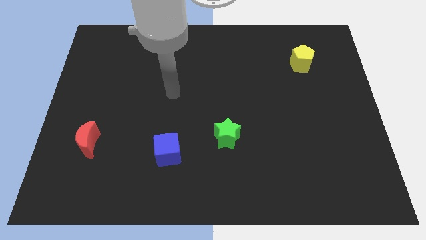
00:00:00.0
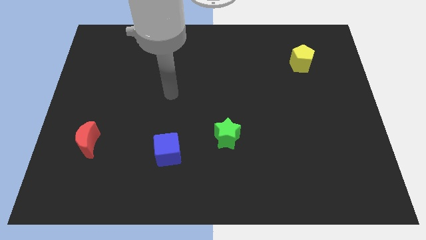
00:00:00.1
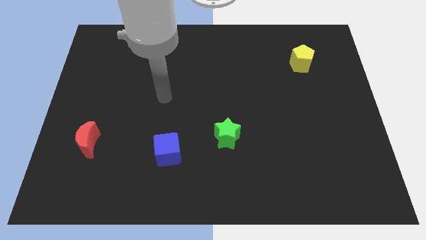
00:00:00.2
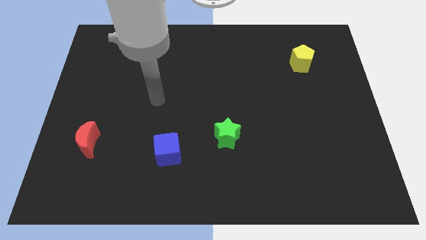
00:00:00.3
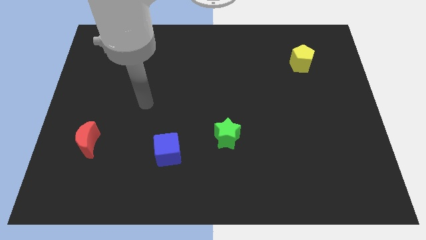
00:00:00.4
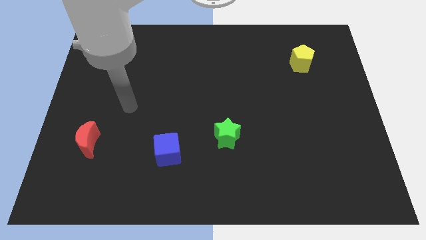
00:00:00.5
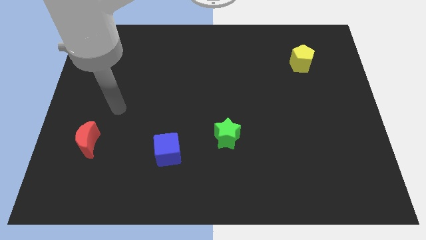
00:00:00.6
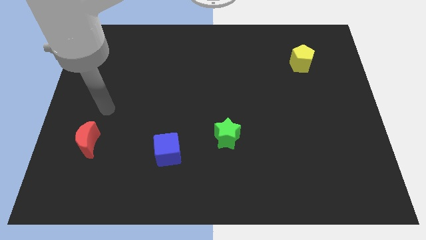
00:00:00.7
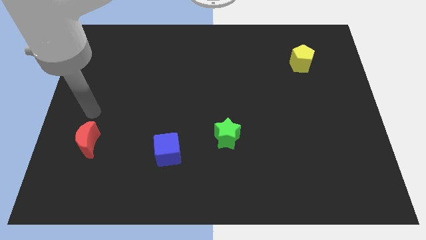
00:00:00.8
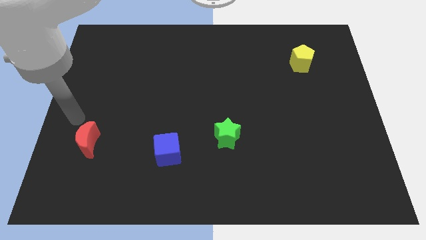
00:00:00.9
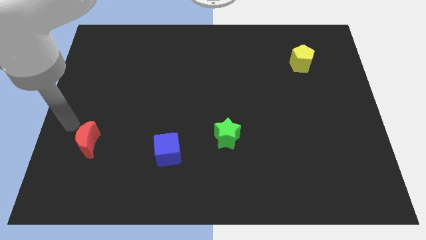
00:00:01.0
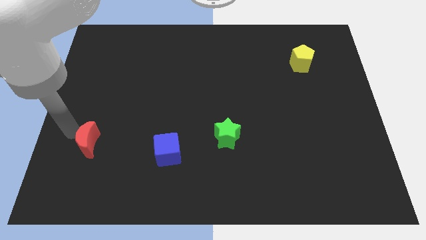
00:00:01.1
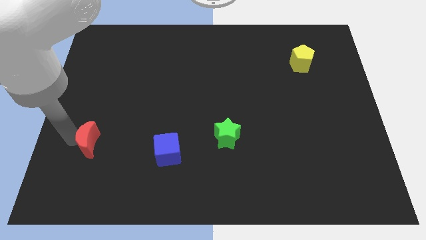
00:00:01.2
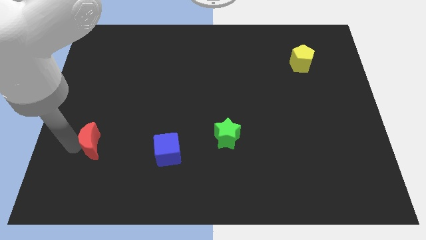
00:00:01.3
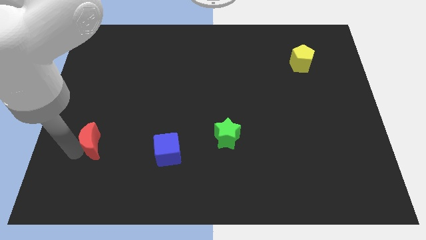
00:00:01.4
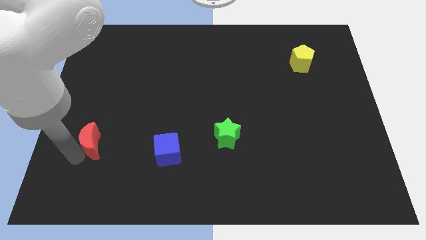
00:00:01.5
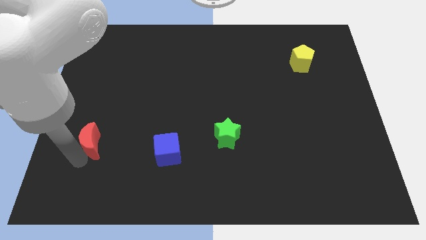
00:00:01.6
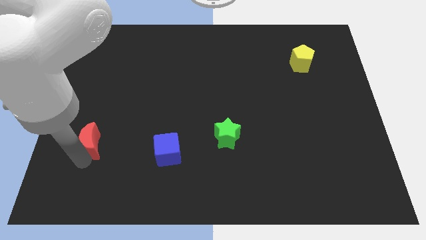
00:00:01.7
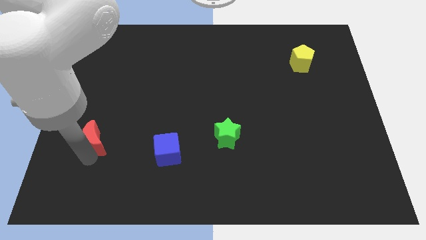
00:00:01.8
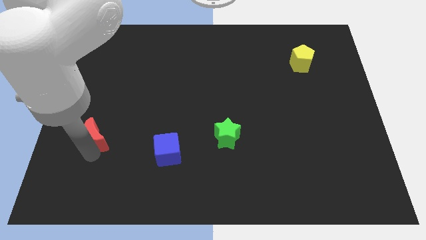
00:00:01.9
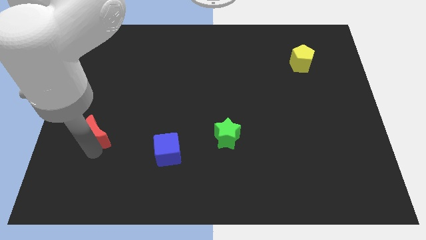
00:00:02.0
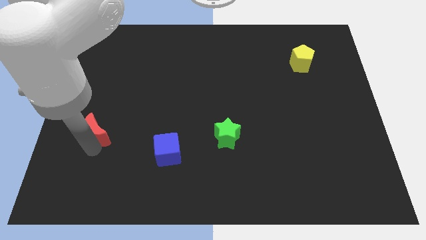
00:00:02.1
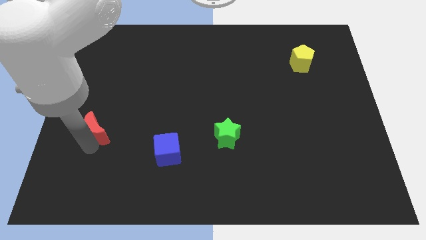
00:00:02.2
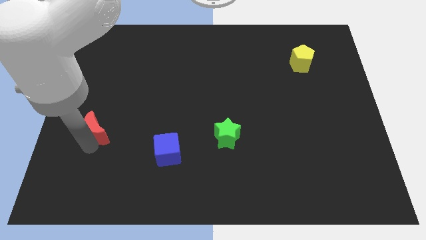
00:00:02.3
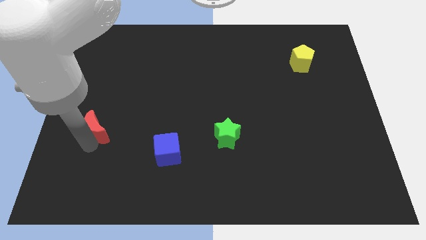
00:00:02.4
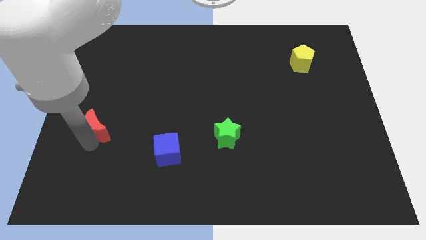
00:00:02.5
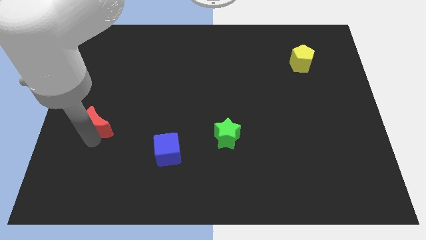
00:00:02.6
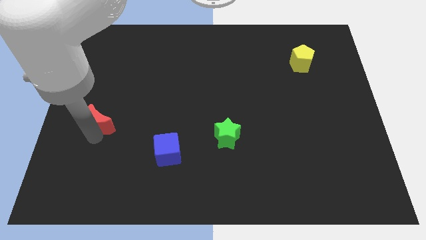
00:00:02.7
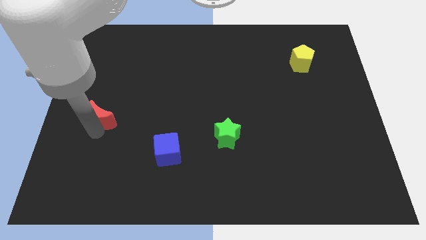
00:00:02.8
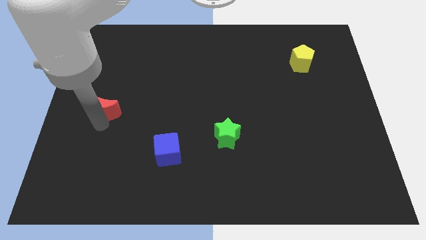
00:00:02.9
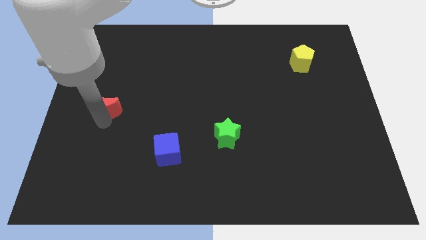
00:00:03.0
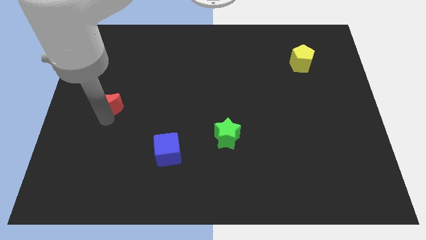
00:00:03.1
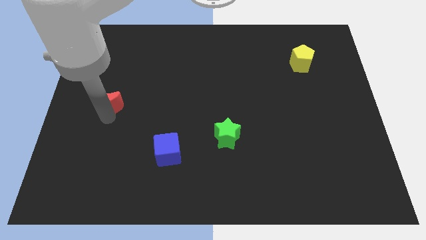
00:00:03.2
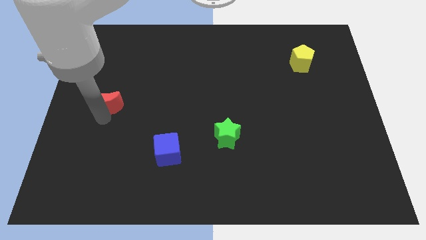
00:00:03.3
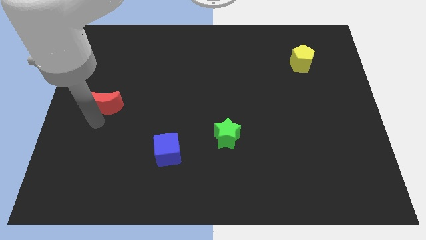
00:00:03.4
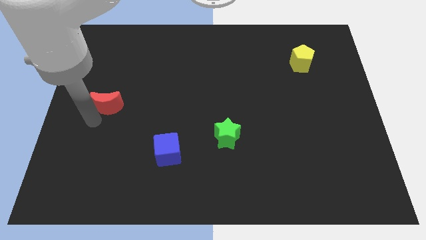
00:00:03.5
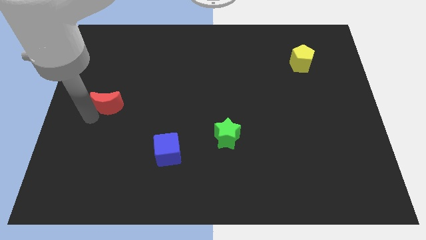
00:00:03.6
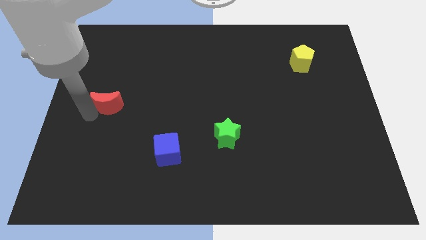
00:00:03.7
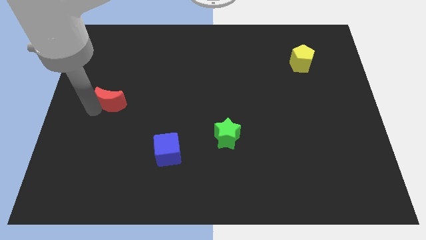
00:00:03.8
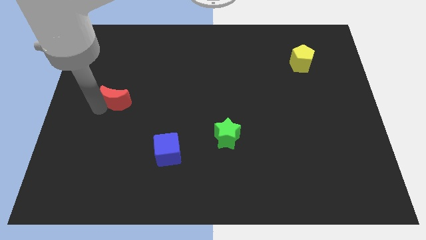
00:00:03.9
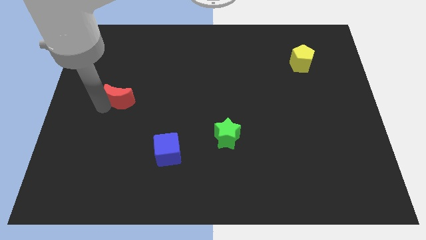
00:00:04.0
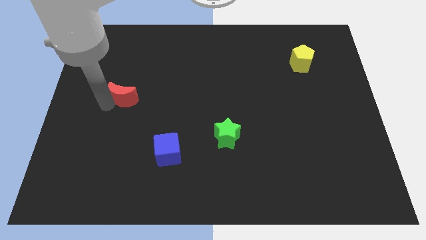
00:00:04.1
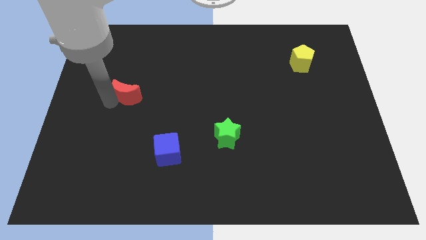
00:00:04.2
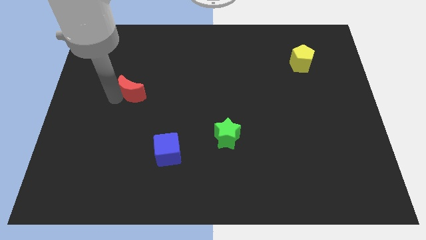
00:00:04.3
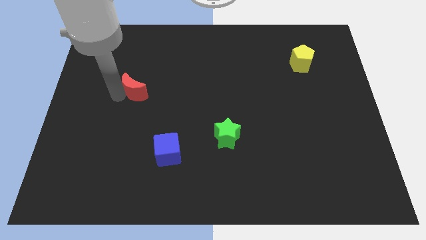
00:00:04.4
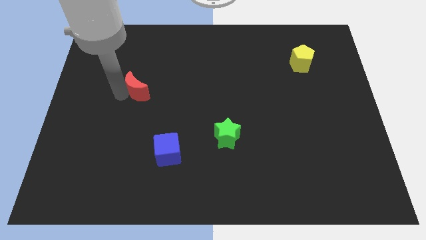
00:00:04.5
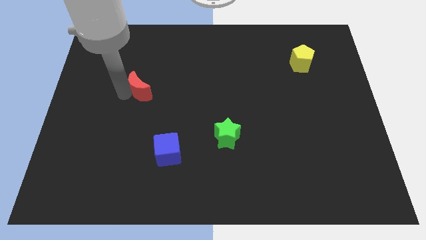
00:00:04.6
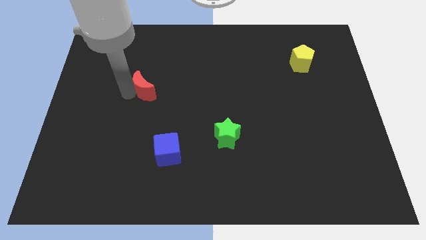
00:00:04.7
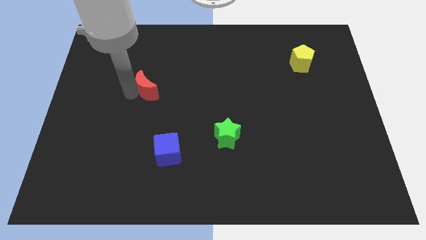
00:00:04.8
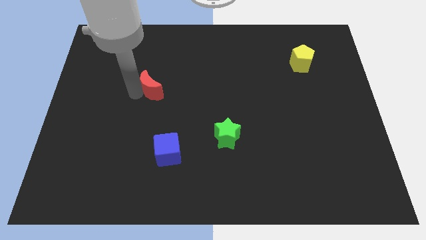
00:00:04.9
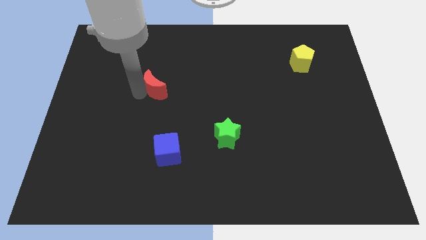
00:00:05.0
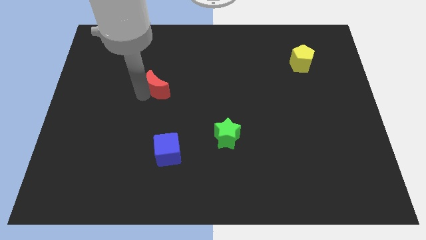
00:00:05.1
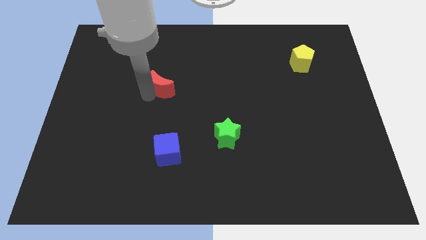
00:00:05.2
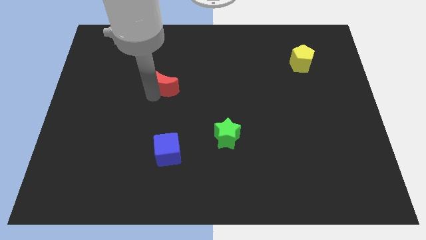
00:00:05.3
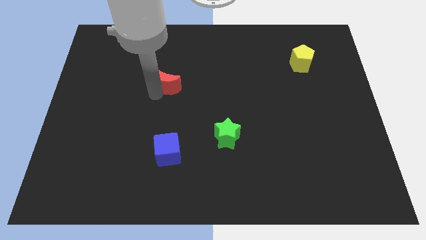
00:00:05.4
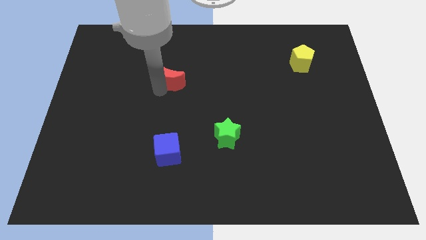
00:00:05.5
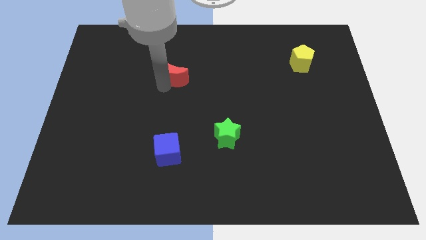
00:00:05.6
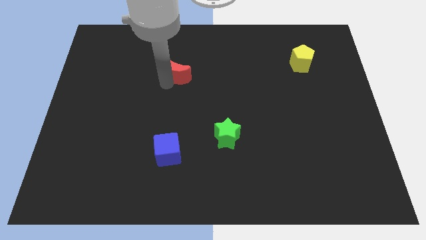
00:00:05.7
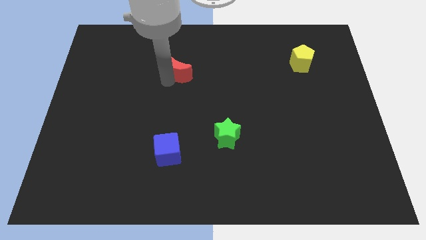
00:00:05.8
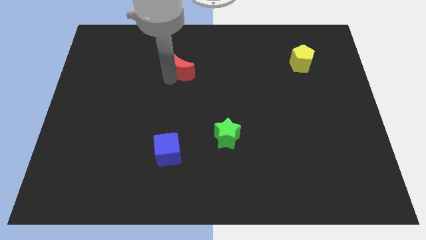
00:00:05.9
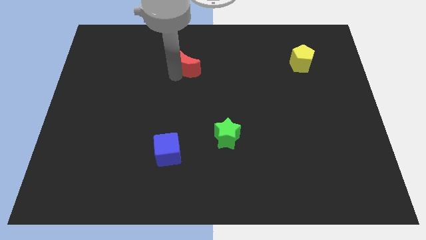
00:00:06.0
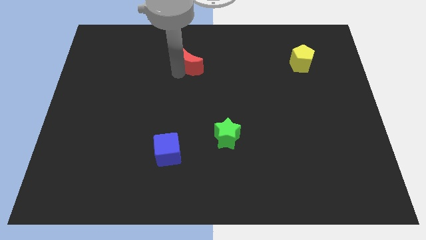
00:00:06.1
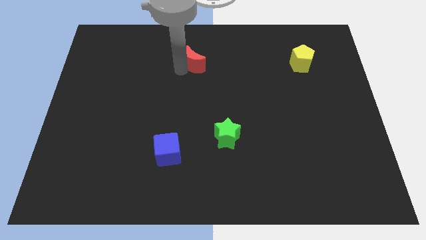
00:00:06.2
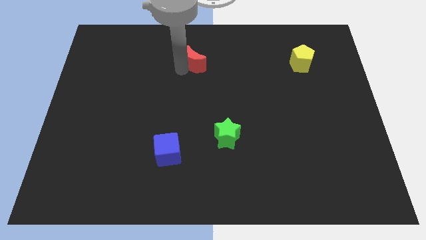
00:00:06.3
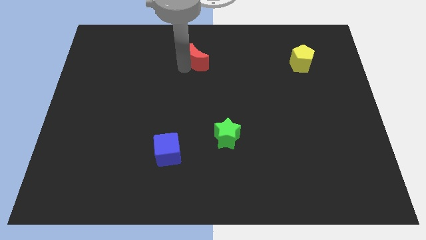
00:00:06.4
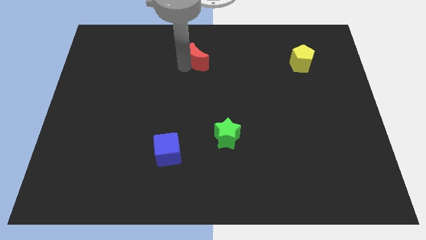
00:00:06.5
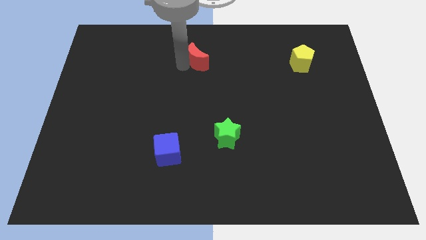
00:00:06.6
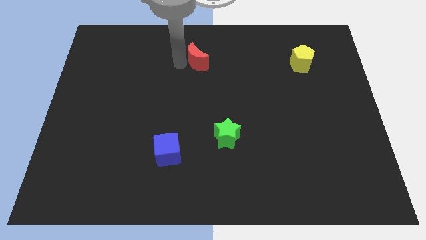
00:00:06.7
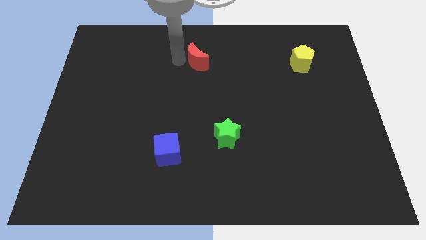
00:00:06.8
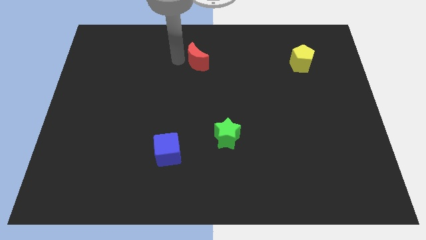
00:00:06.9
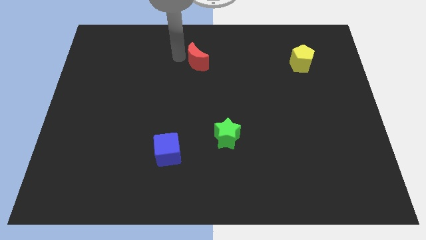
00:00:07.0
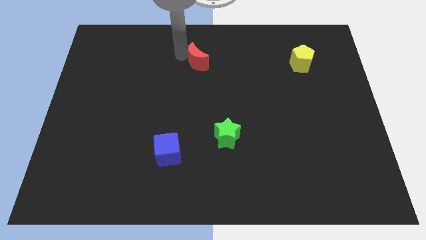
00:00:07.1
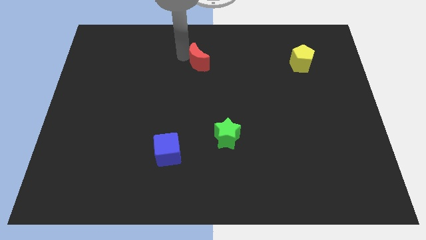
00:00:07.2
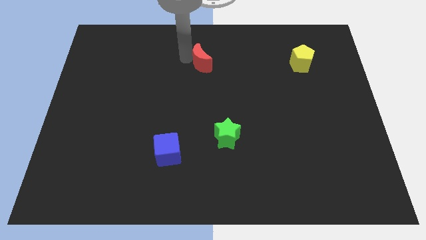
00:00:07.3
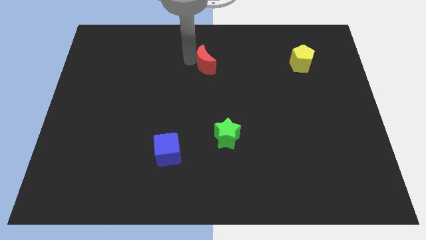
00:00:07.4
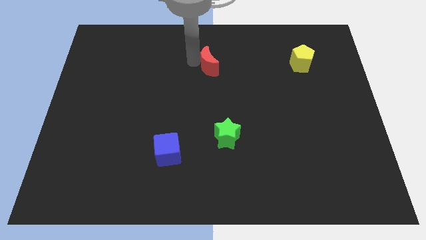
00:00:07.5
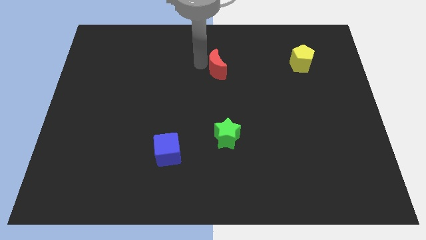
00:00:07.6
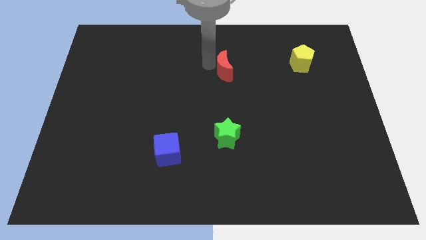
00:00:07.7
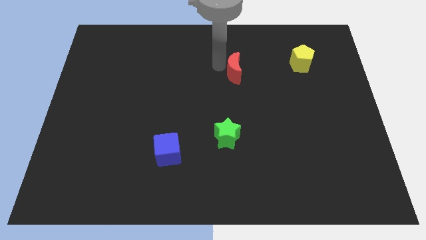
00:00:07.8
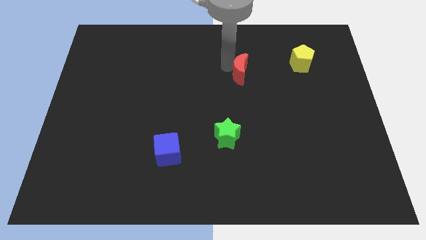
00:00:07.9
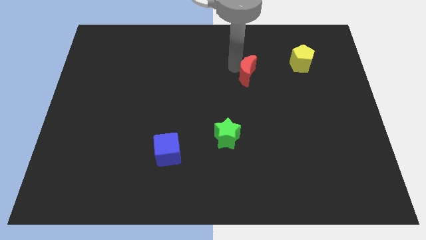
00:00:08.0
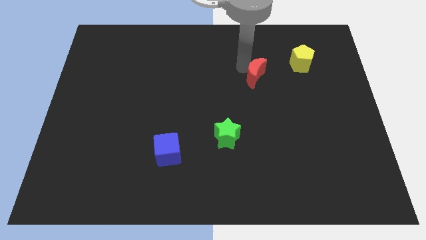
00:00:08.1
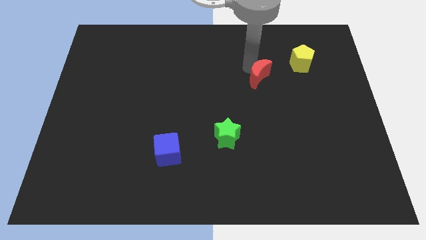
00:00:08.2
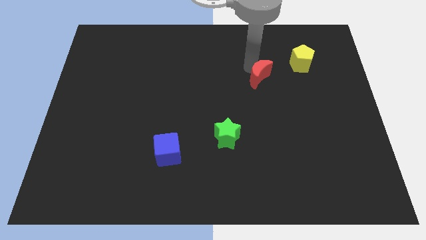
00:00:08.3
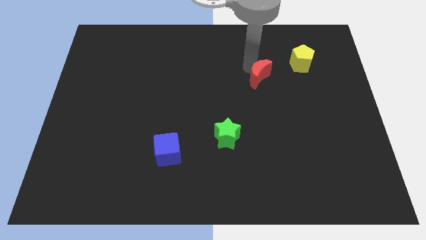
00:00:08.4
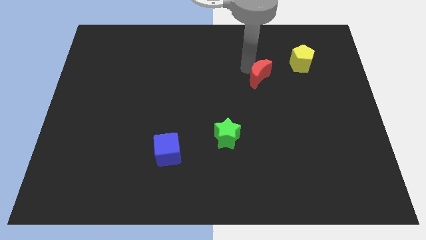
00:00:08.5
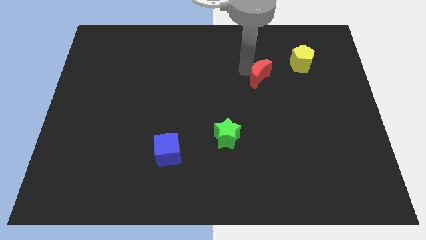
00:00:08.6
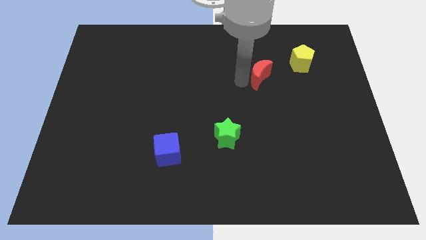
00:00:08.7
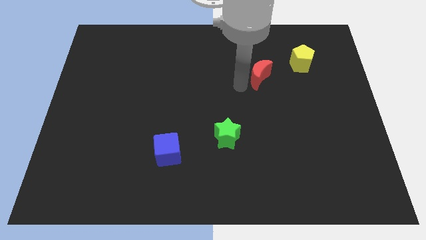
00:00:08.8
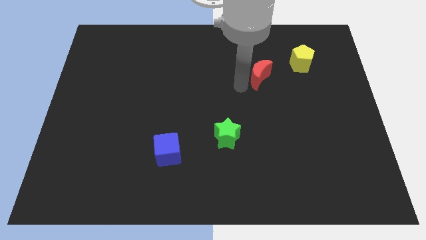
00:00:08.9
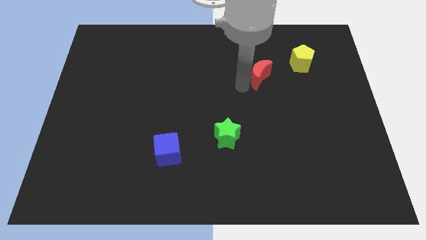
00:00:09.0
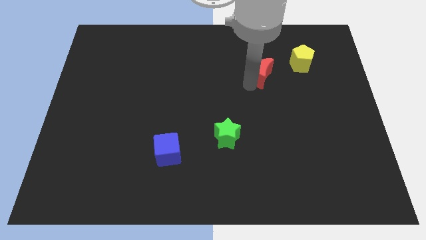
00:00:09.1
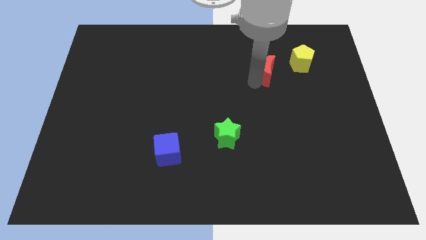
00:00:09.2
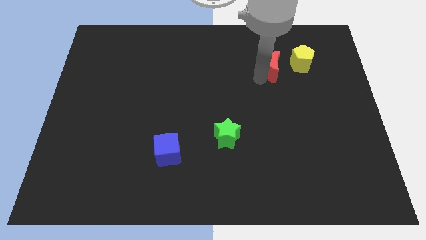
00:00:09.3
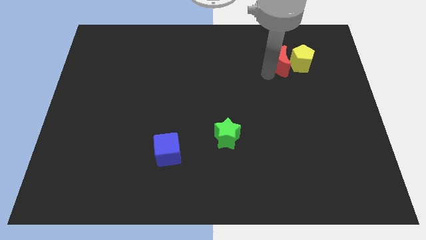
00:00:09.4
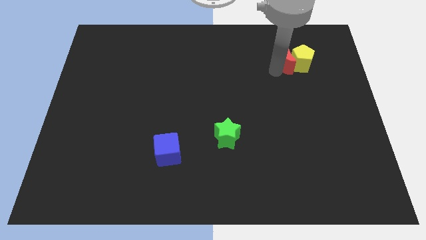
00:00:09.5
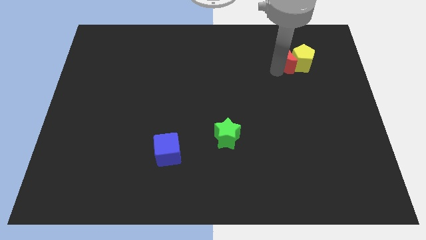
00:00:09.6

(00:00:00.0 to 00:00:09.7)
push the moon next to the yellow pentagon
